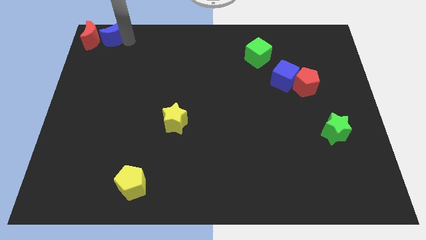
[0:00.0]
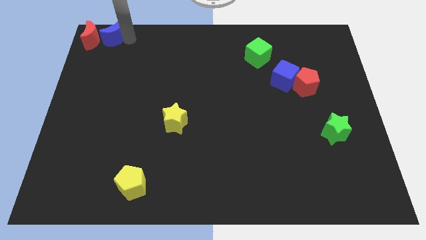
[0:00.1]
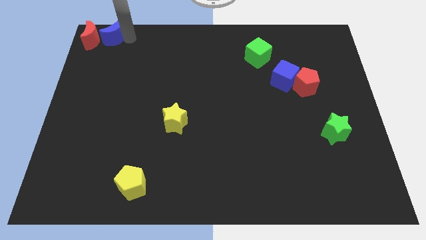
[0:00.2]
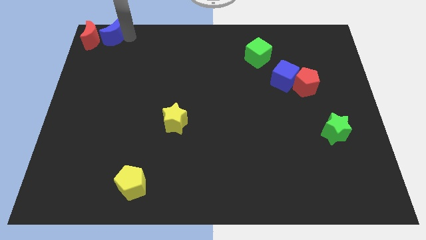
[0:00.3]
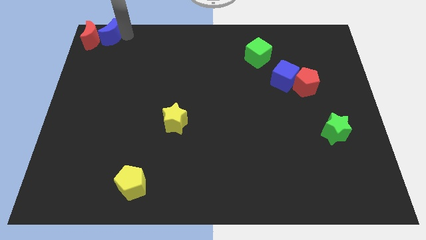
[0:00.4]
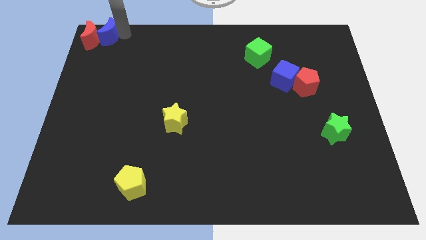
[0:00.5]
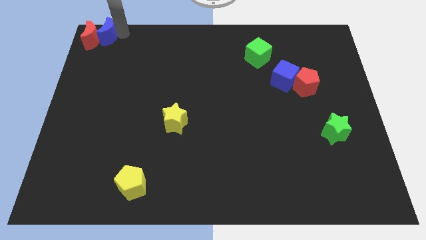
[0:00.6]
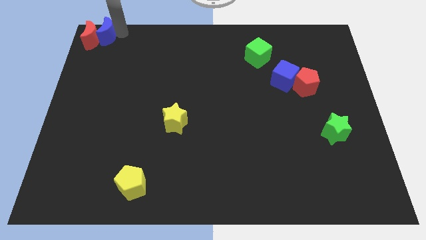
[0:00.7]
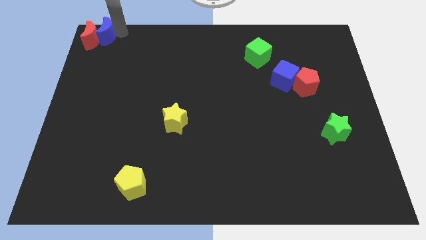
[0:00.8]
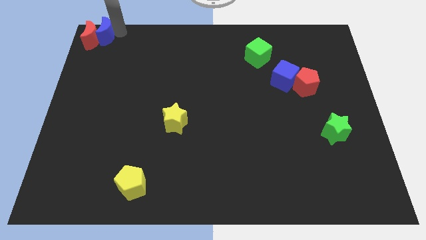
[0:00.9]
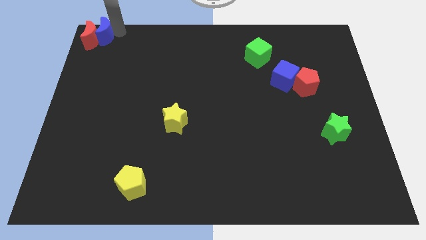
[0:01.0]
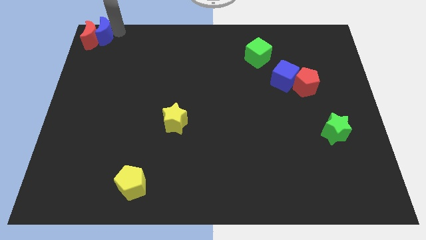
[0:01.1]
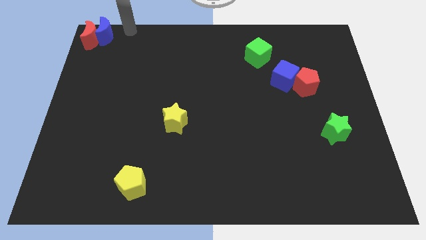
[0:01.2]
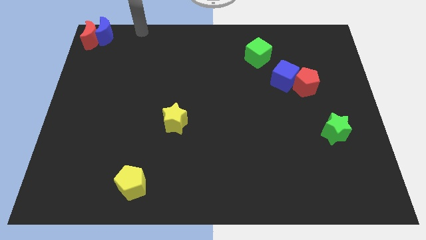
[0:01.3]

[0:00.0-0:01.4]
move the blue cube next to the red moon

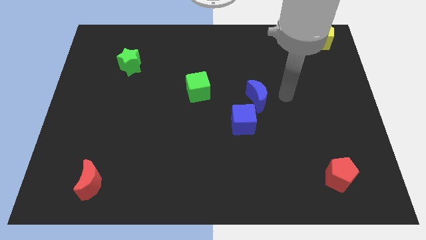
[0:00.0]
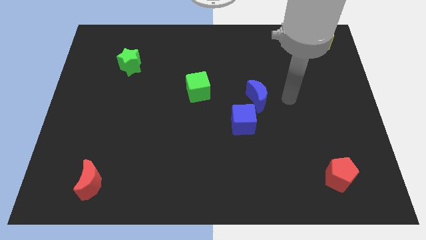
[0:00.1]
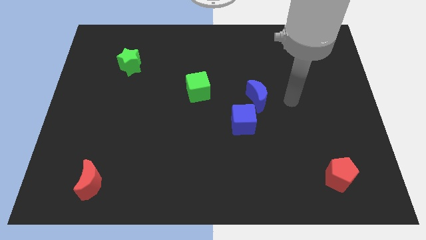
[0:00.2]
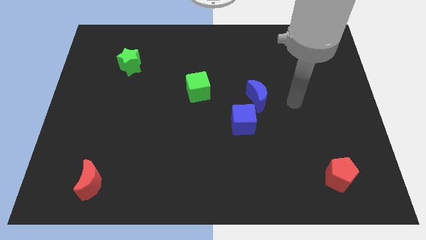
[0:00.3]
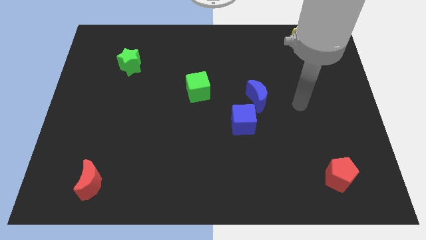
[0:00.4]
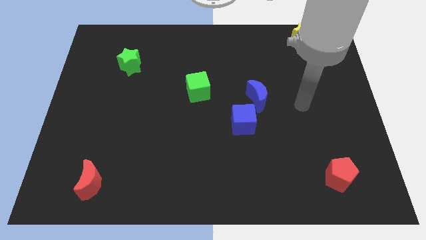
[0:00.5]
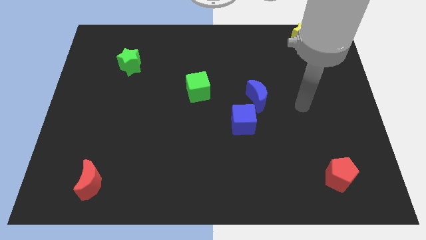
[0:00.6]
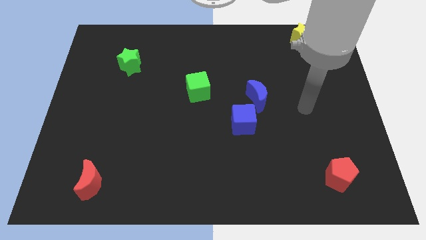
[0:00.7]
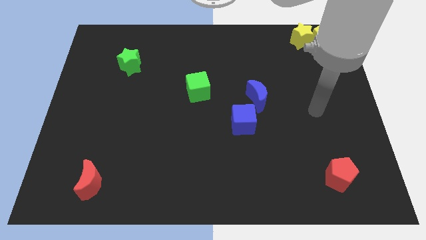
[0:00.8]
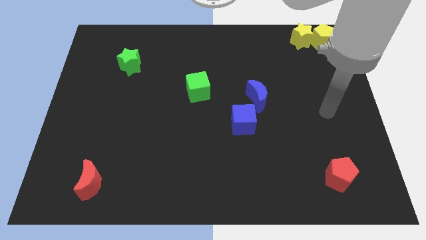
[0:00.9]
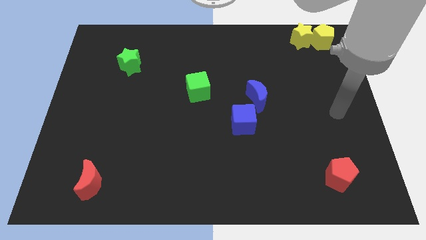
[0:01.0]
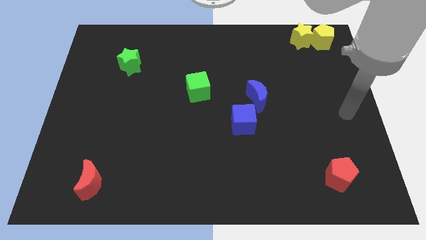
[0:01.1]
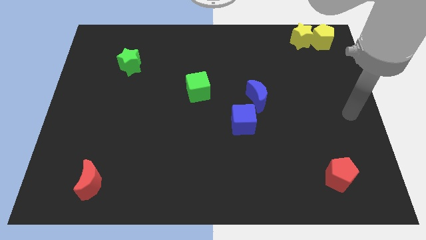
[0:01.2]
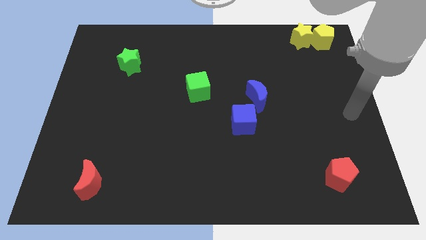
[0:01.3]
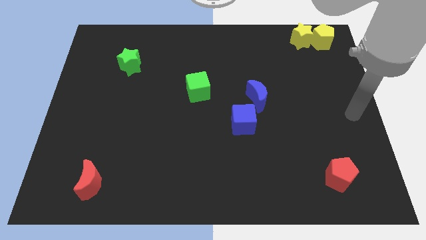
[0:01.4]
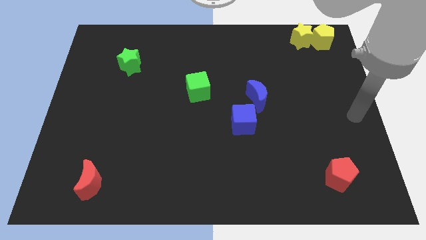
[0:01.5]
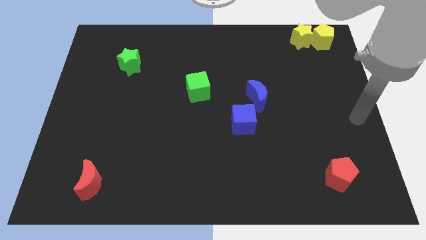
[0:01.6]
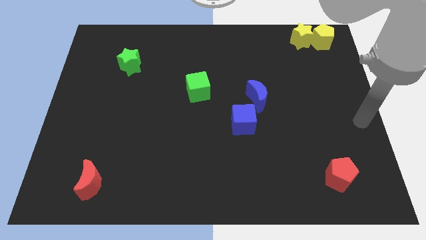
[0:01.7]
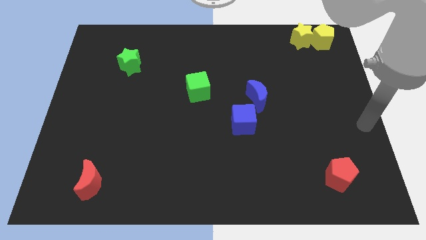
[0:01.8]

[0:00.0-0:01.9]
move your arm to the right center of the board

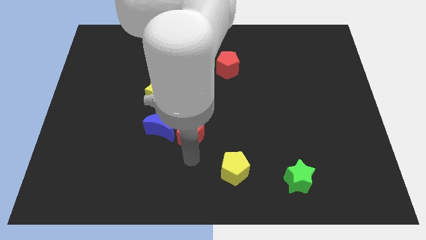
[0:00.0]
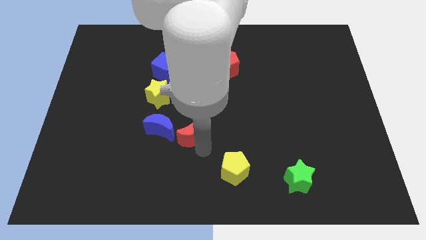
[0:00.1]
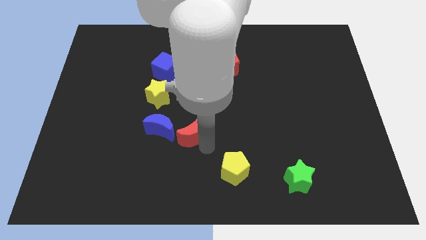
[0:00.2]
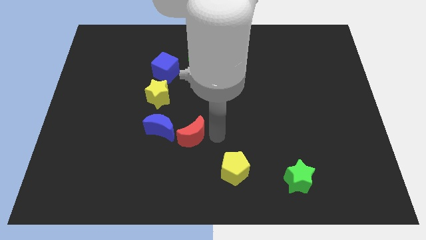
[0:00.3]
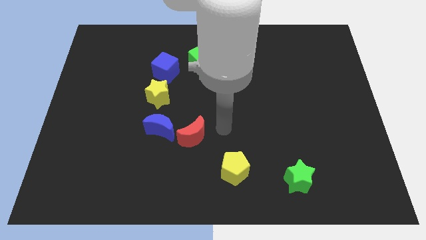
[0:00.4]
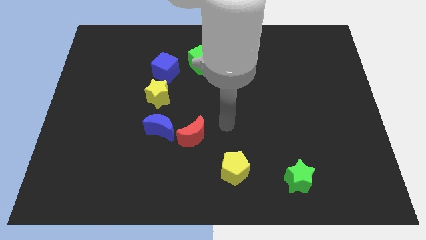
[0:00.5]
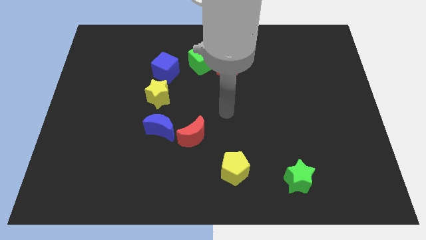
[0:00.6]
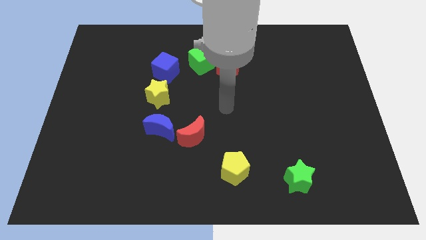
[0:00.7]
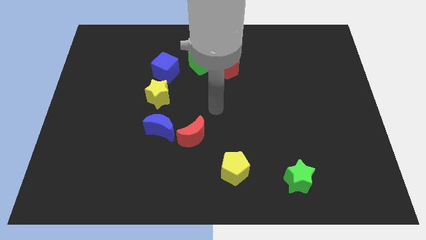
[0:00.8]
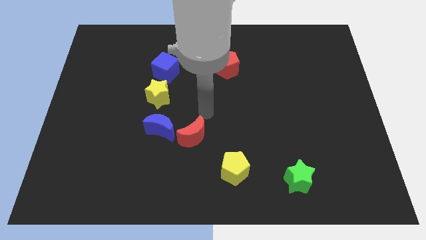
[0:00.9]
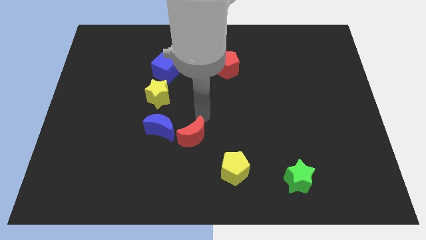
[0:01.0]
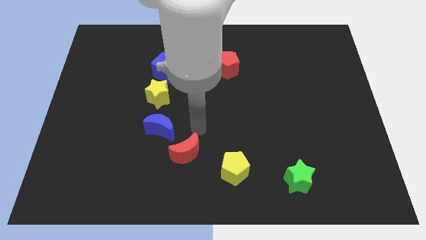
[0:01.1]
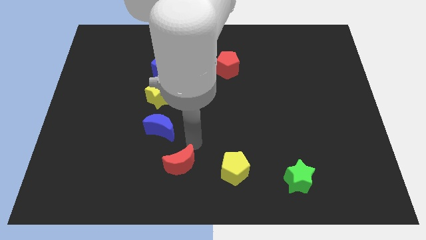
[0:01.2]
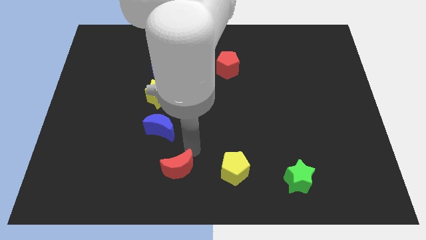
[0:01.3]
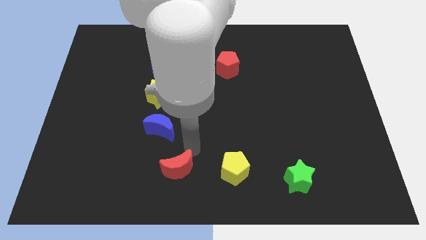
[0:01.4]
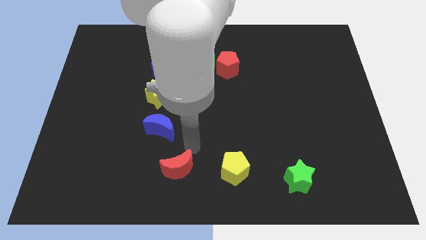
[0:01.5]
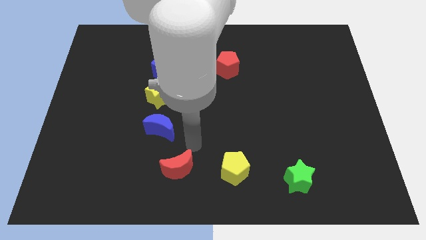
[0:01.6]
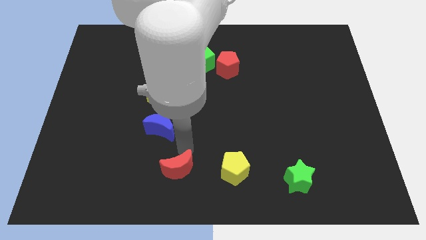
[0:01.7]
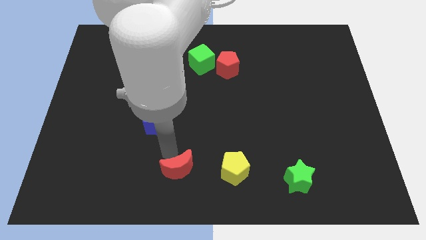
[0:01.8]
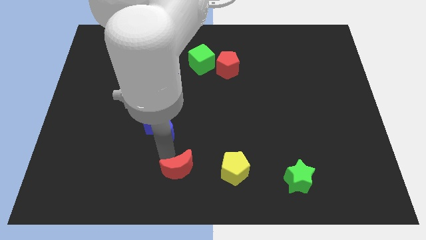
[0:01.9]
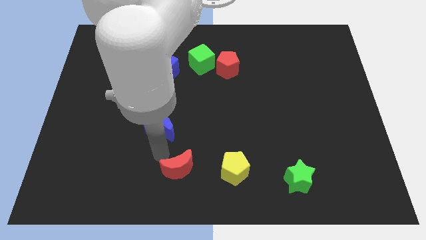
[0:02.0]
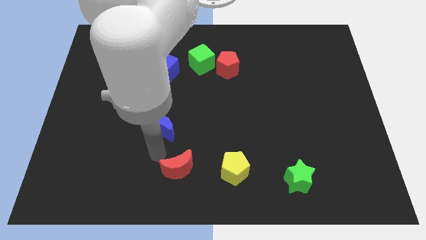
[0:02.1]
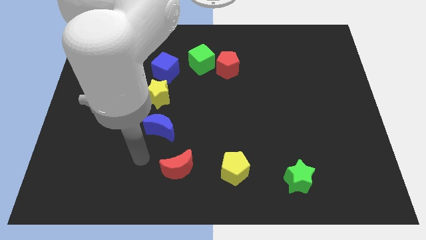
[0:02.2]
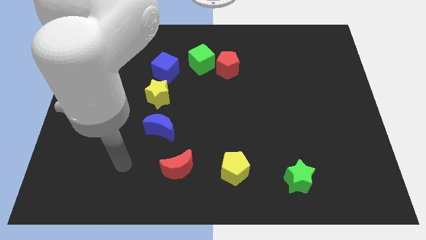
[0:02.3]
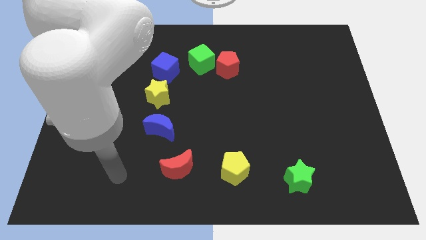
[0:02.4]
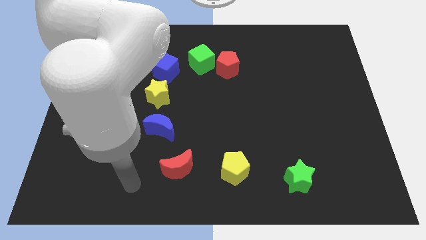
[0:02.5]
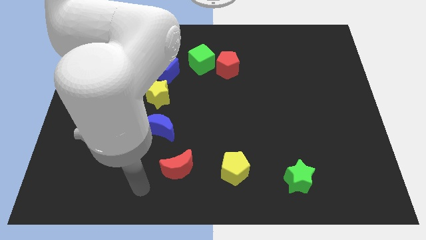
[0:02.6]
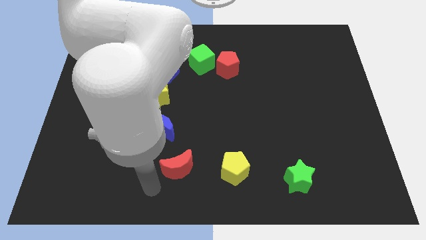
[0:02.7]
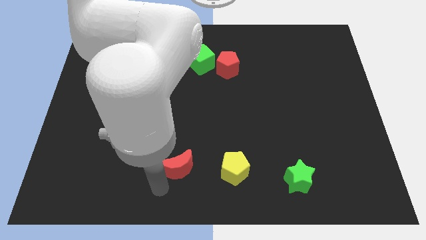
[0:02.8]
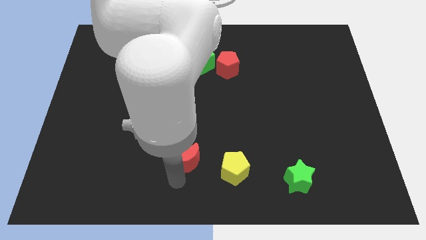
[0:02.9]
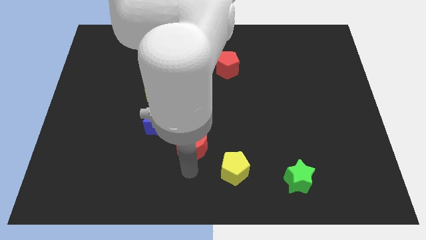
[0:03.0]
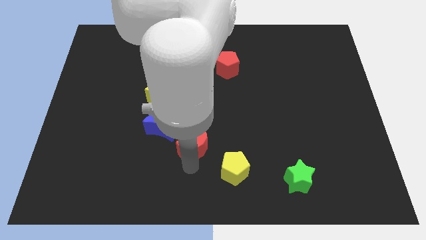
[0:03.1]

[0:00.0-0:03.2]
adjust the red crescent in its origin

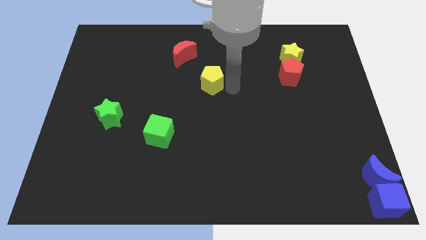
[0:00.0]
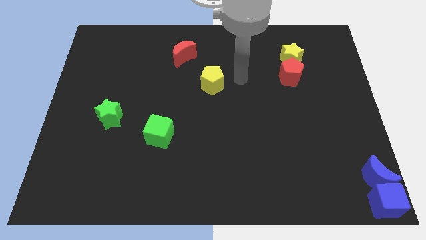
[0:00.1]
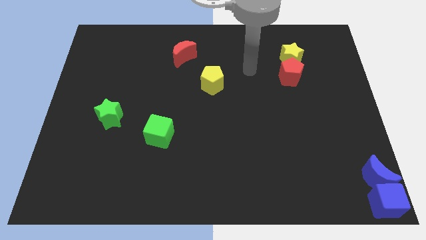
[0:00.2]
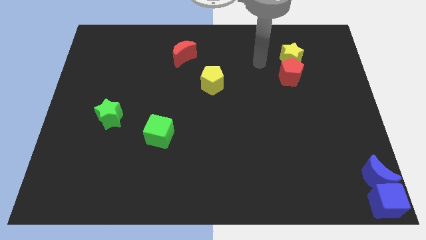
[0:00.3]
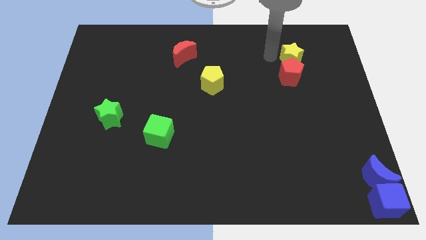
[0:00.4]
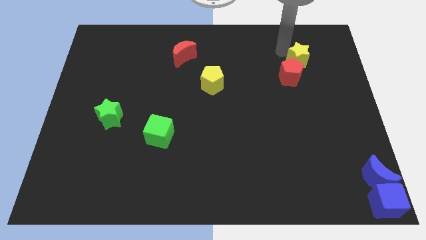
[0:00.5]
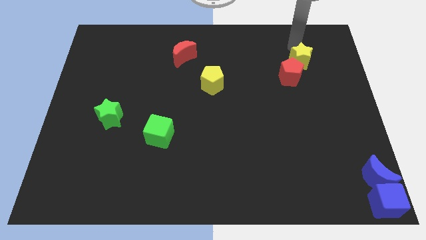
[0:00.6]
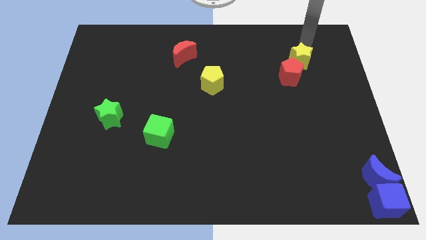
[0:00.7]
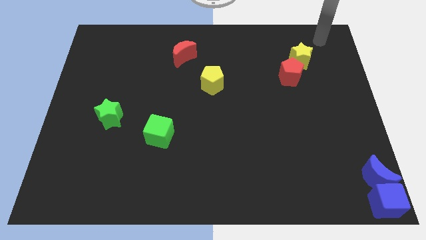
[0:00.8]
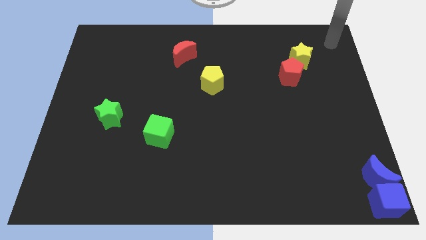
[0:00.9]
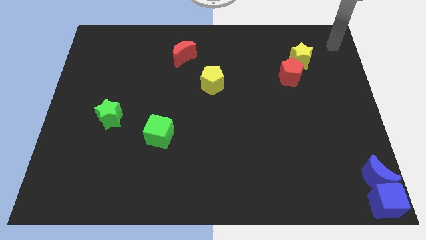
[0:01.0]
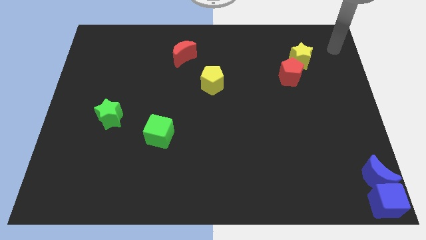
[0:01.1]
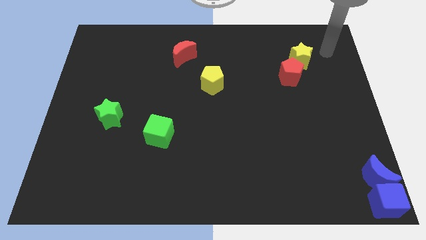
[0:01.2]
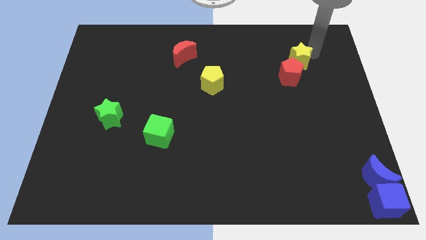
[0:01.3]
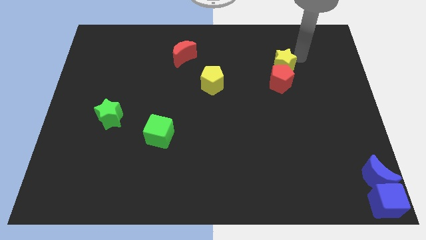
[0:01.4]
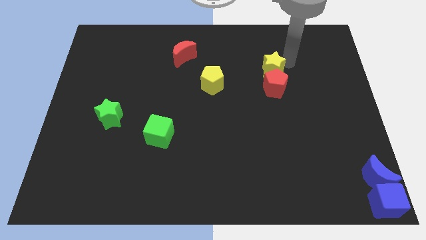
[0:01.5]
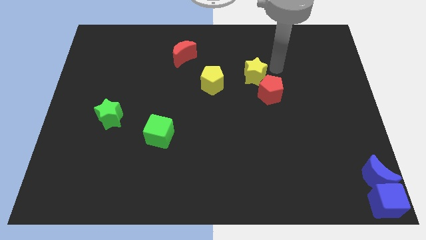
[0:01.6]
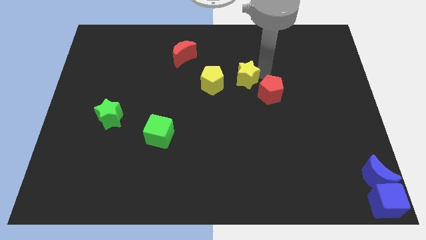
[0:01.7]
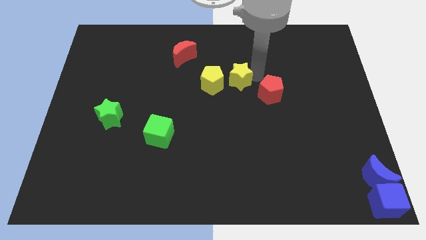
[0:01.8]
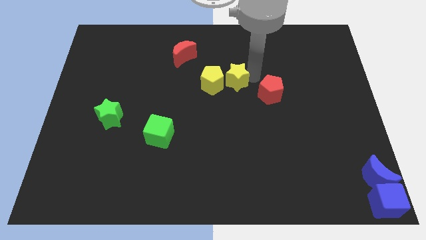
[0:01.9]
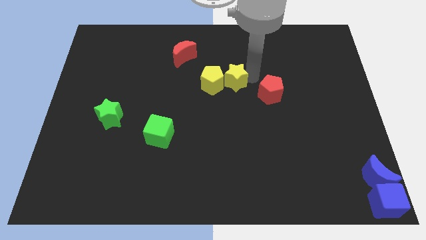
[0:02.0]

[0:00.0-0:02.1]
drag a yellow star beside the yellow pentagon

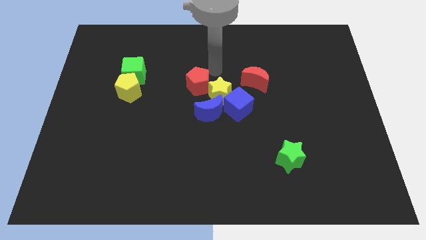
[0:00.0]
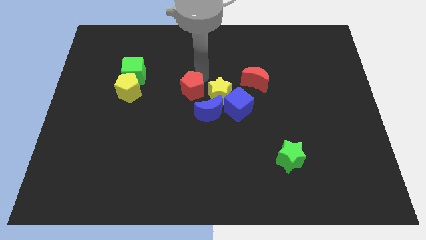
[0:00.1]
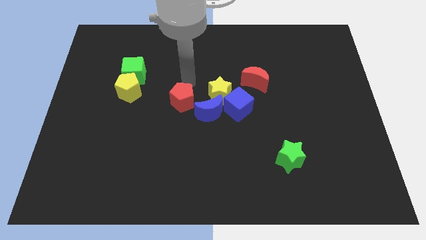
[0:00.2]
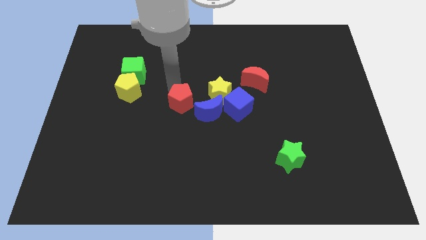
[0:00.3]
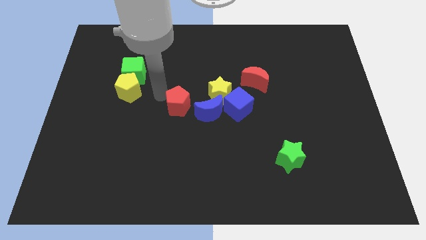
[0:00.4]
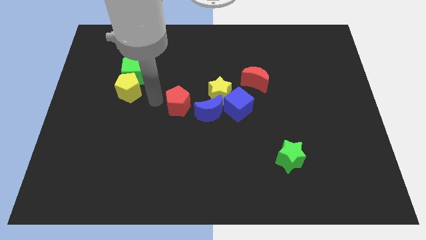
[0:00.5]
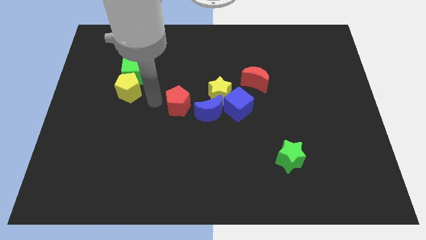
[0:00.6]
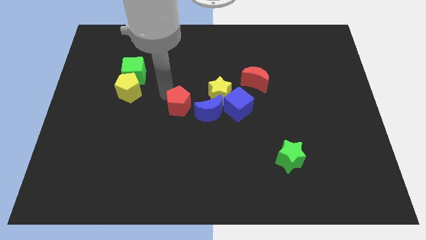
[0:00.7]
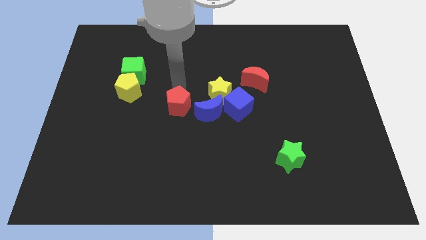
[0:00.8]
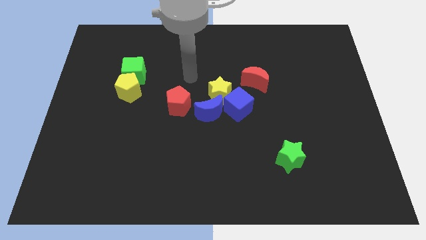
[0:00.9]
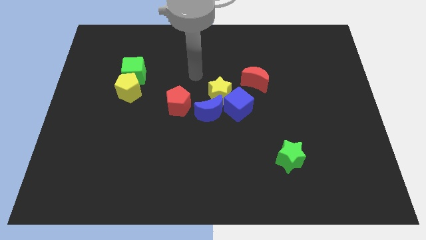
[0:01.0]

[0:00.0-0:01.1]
move the red pentagon to the left of the blue crescent
